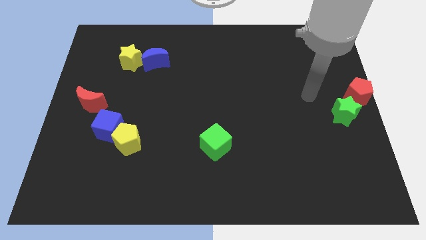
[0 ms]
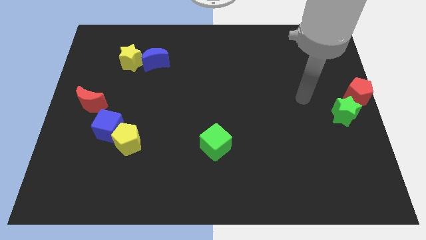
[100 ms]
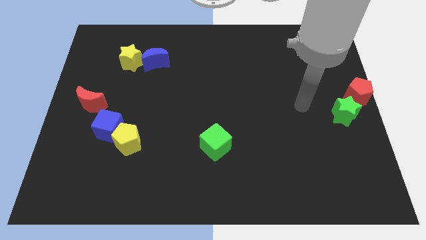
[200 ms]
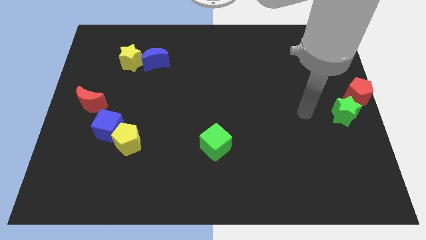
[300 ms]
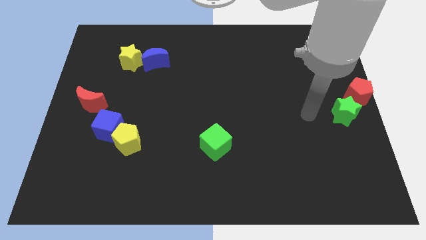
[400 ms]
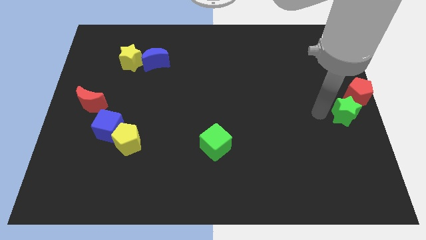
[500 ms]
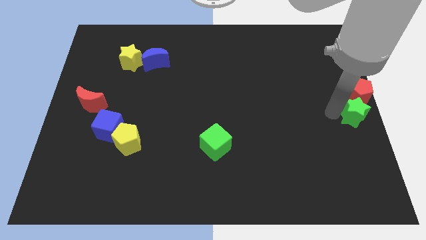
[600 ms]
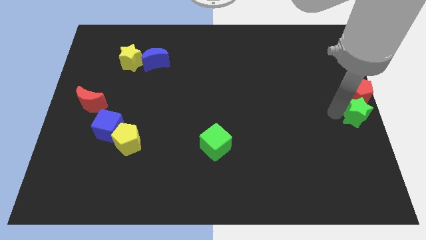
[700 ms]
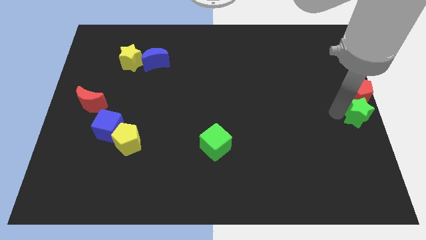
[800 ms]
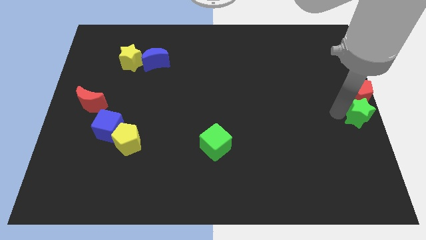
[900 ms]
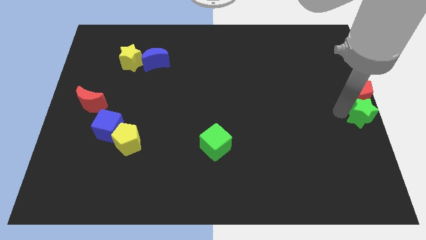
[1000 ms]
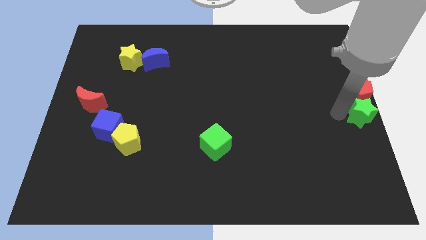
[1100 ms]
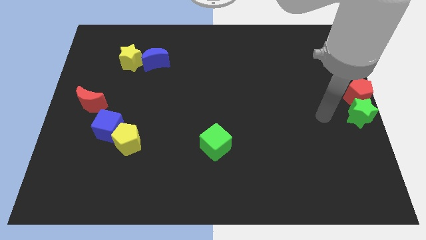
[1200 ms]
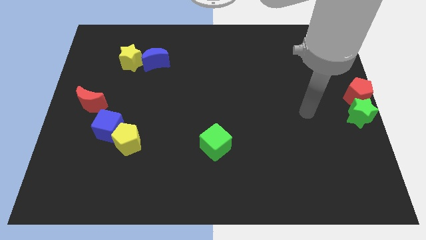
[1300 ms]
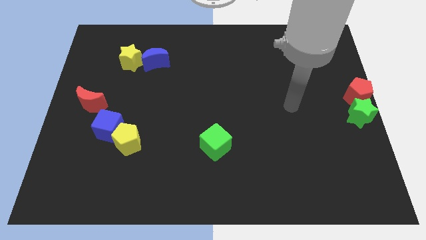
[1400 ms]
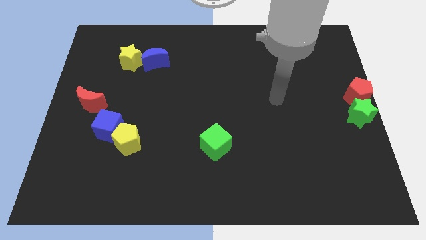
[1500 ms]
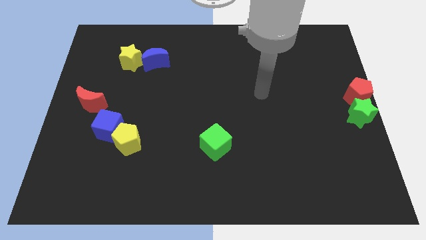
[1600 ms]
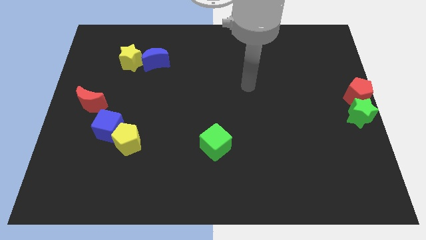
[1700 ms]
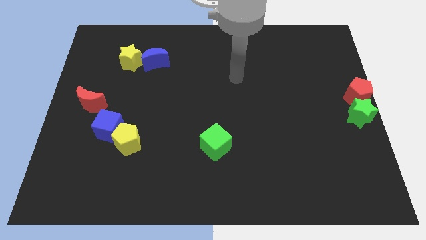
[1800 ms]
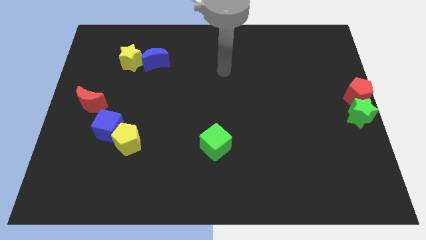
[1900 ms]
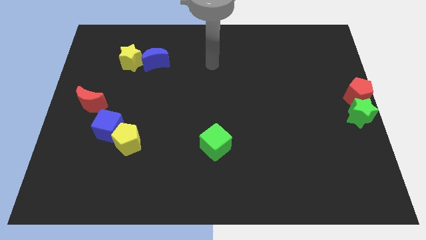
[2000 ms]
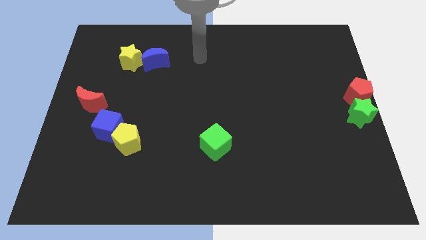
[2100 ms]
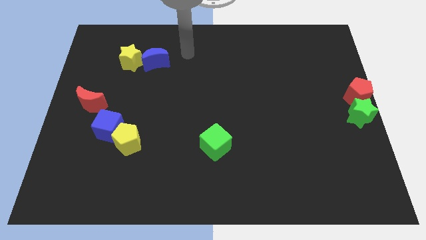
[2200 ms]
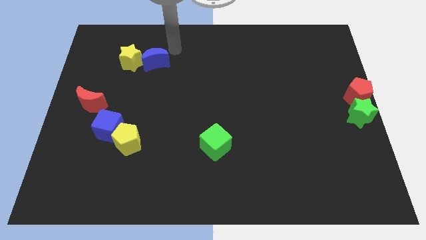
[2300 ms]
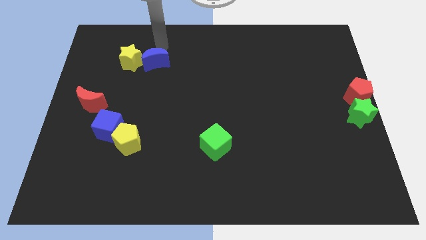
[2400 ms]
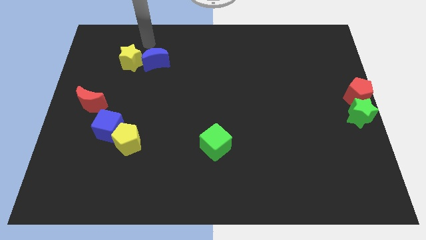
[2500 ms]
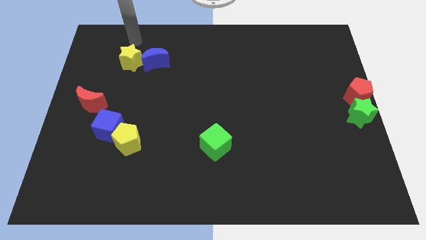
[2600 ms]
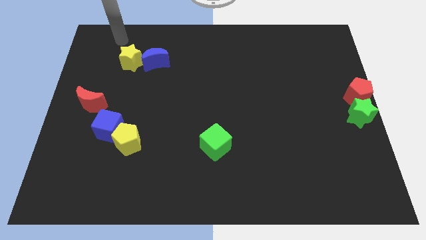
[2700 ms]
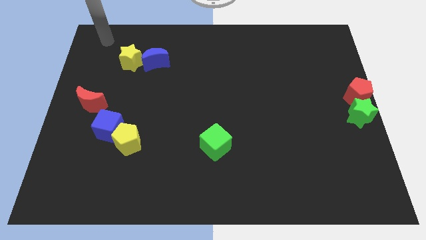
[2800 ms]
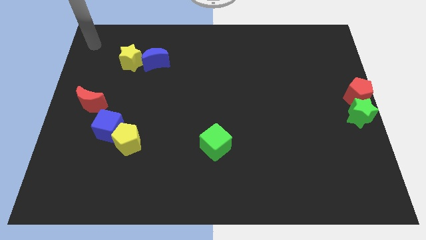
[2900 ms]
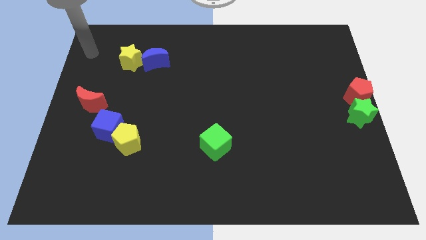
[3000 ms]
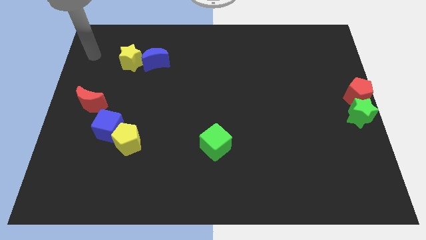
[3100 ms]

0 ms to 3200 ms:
place green star to the bottom of red pentagon

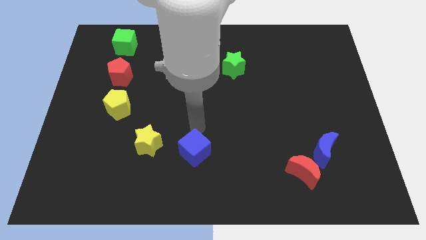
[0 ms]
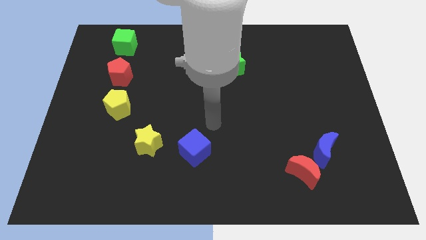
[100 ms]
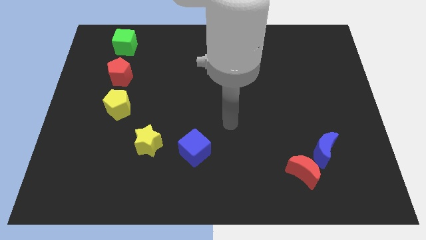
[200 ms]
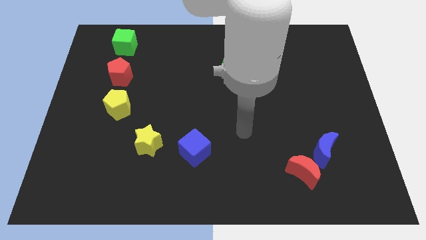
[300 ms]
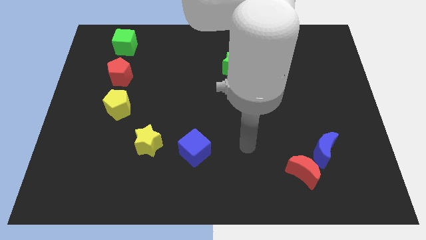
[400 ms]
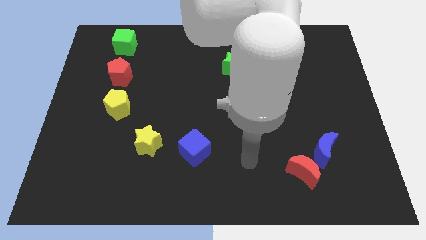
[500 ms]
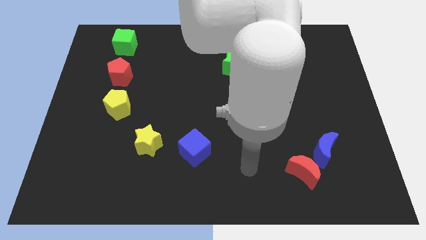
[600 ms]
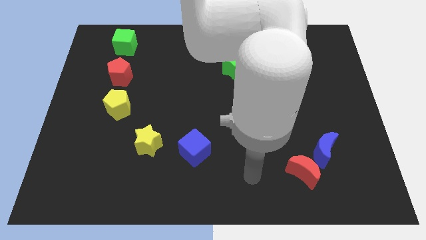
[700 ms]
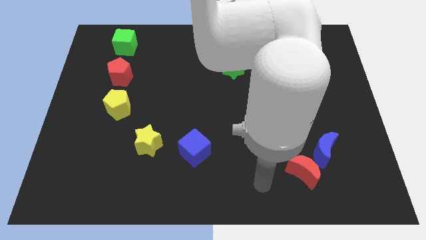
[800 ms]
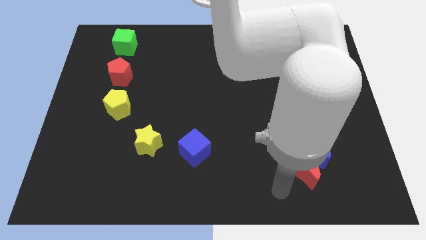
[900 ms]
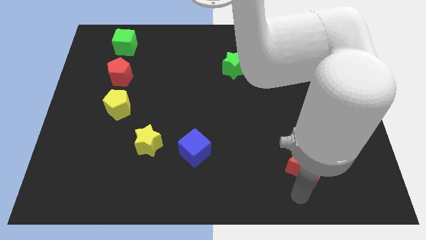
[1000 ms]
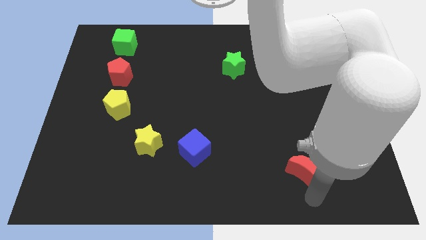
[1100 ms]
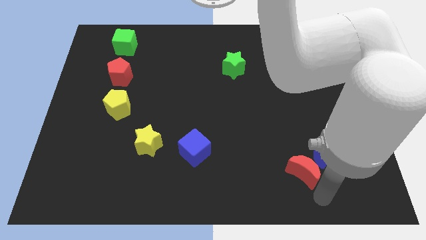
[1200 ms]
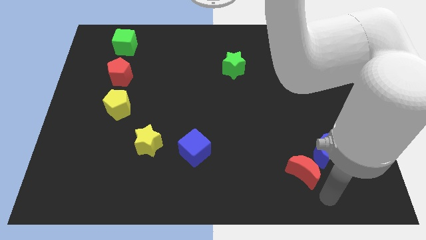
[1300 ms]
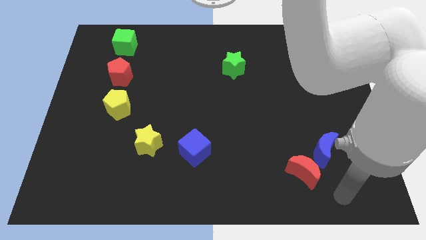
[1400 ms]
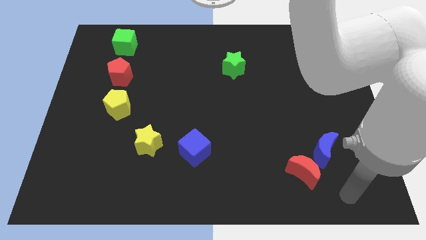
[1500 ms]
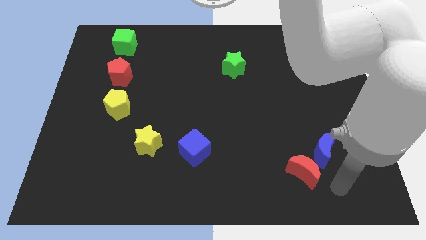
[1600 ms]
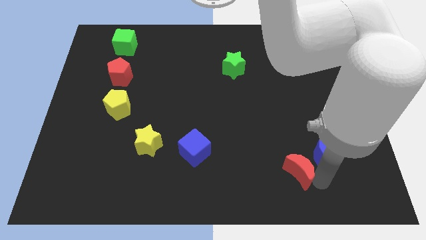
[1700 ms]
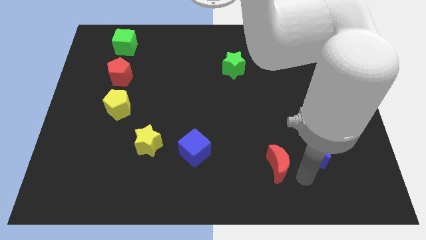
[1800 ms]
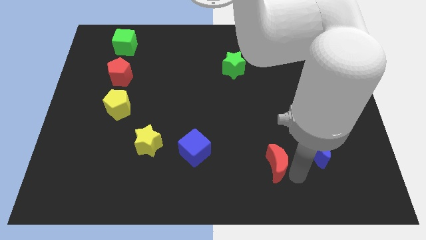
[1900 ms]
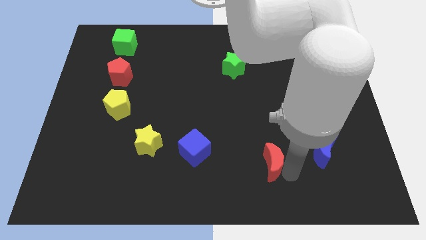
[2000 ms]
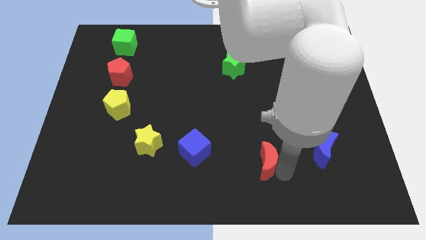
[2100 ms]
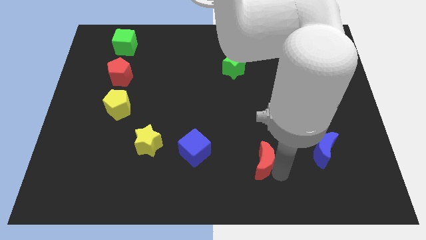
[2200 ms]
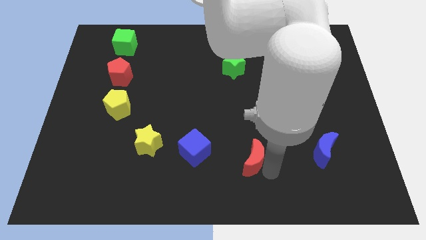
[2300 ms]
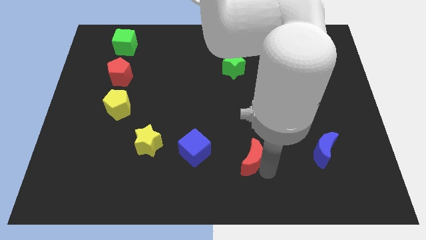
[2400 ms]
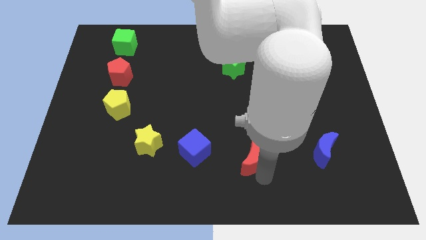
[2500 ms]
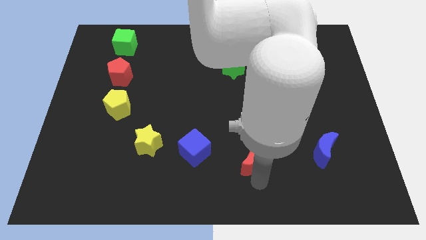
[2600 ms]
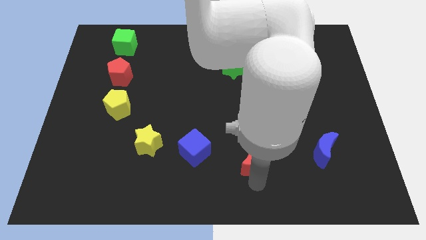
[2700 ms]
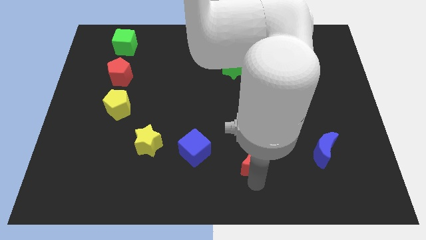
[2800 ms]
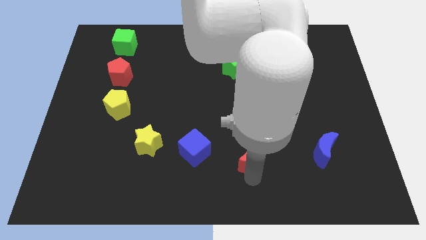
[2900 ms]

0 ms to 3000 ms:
push the red moon towards the blue cube

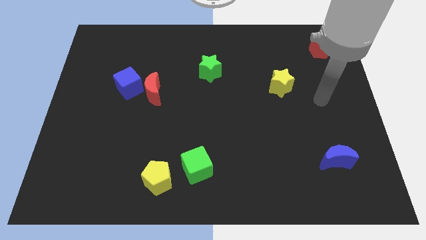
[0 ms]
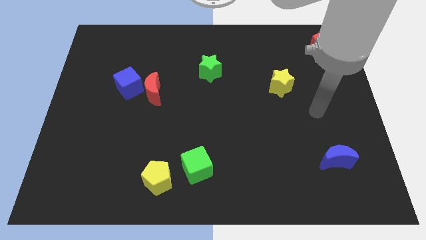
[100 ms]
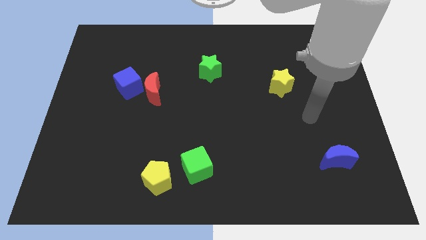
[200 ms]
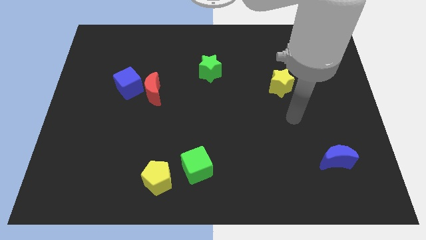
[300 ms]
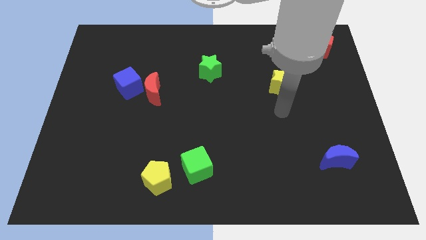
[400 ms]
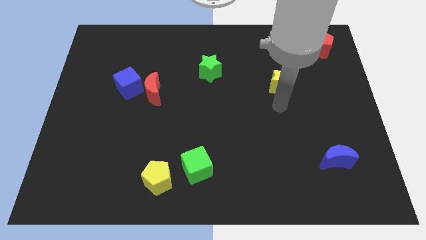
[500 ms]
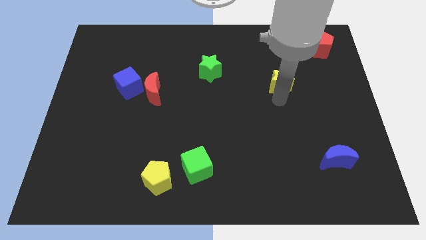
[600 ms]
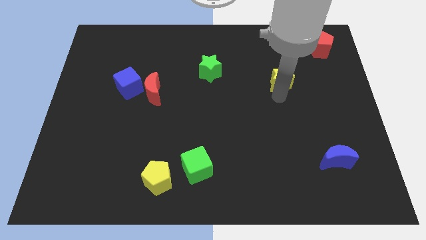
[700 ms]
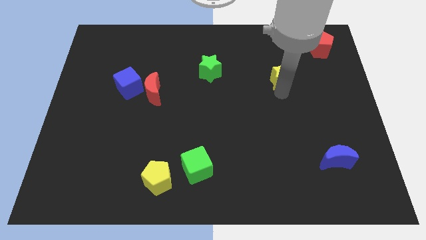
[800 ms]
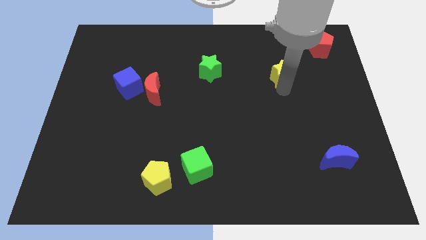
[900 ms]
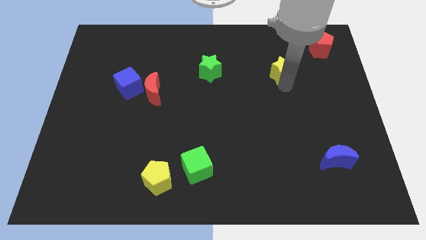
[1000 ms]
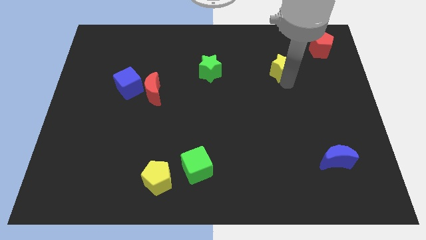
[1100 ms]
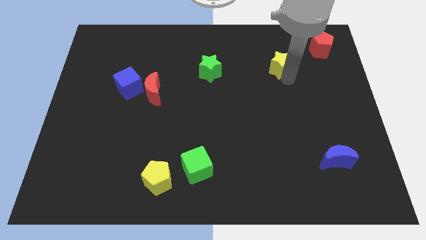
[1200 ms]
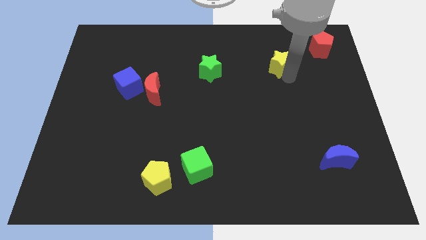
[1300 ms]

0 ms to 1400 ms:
slightly move the yellow star up

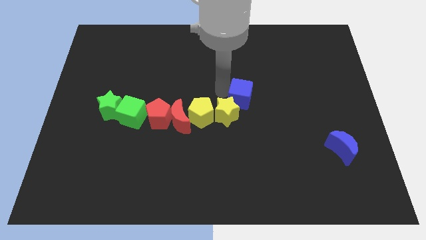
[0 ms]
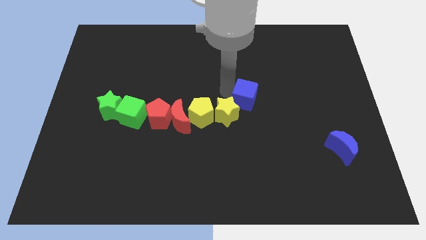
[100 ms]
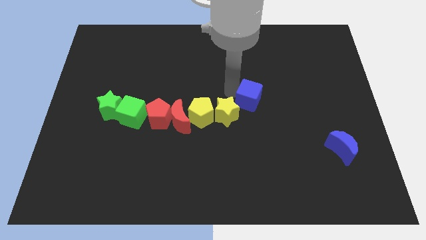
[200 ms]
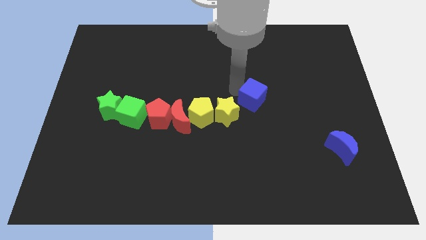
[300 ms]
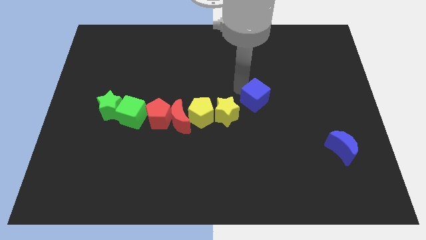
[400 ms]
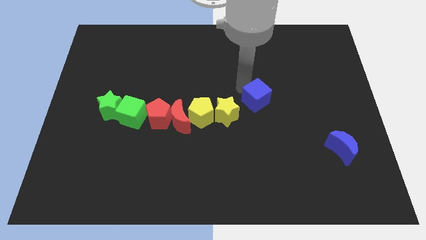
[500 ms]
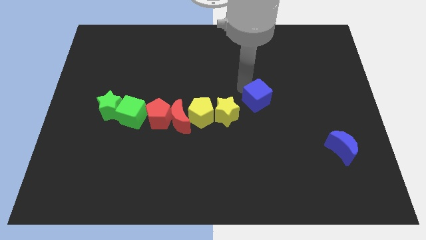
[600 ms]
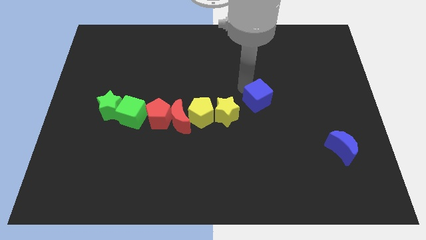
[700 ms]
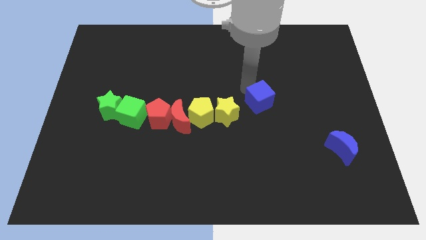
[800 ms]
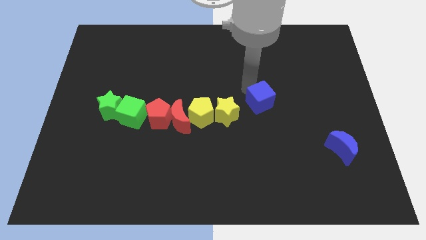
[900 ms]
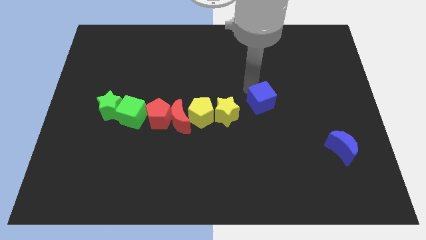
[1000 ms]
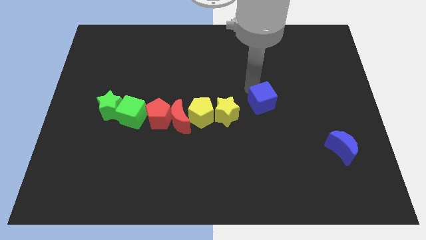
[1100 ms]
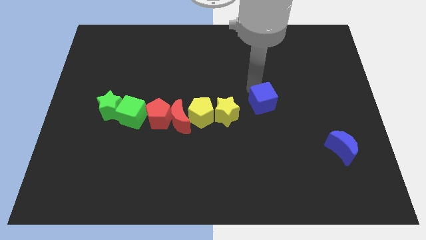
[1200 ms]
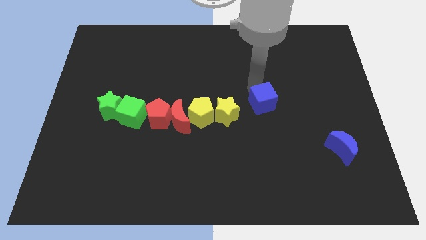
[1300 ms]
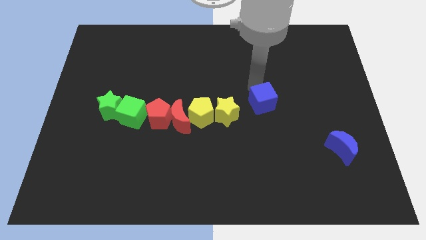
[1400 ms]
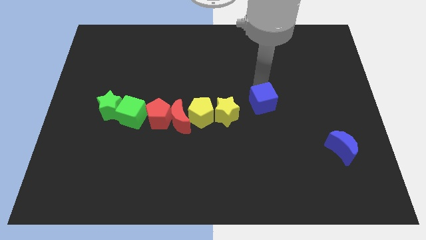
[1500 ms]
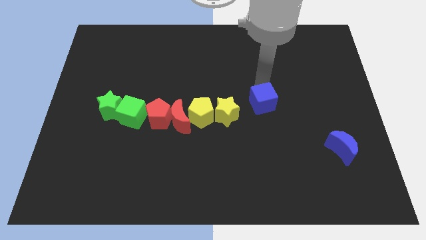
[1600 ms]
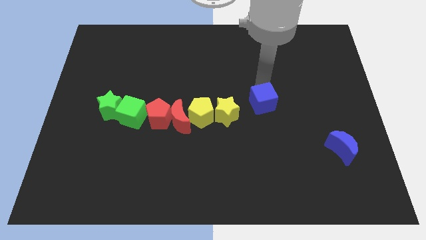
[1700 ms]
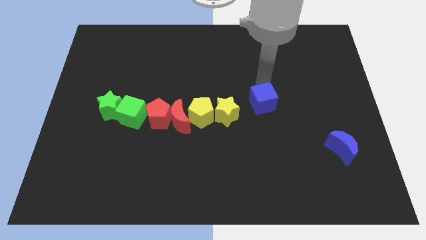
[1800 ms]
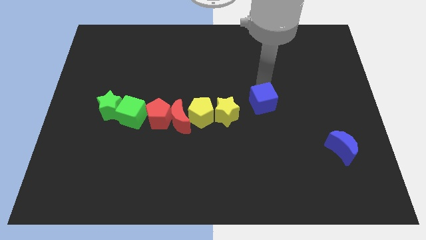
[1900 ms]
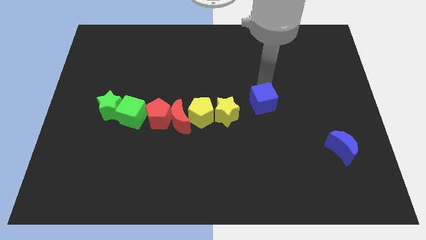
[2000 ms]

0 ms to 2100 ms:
move the blue cube to the right side of the yellow star
